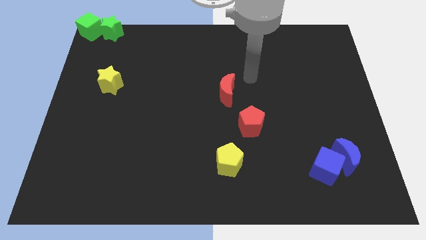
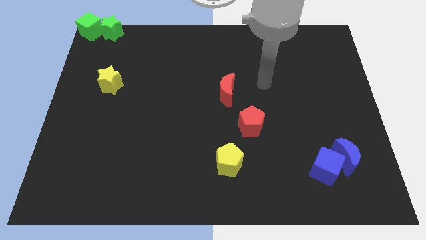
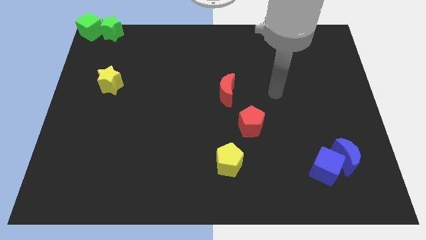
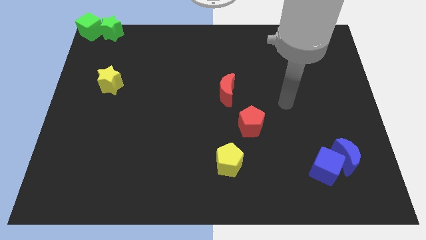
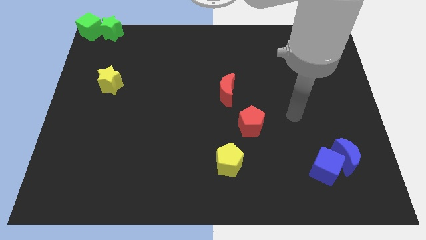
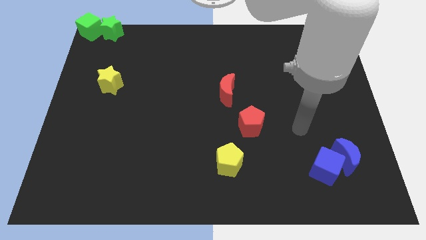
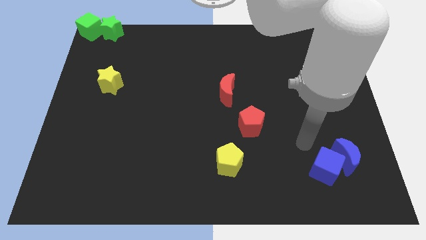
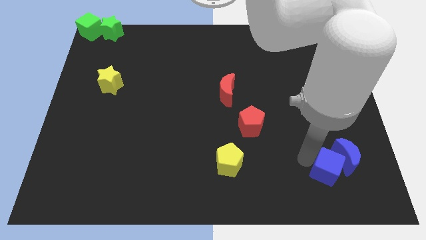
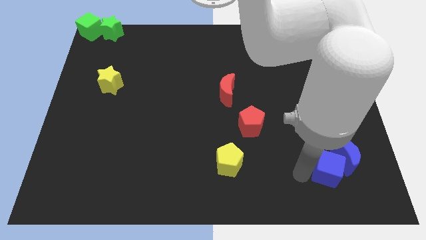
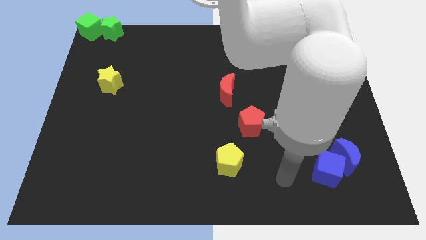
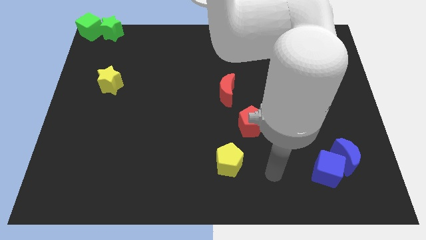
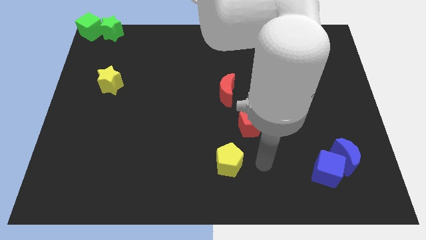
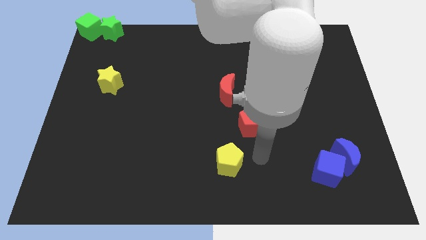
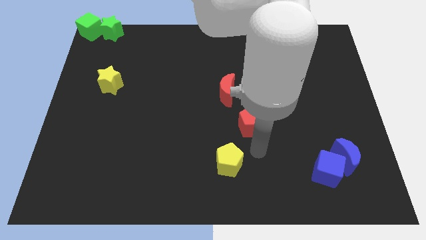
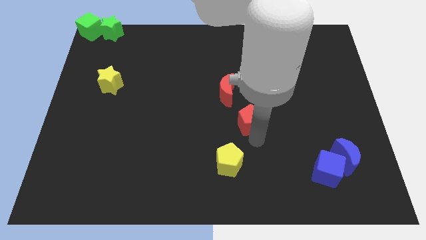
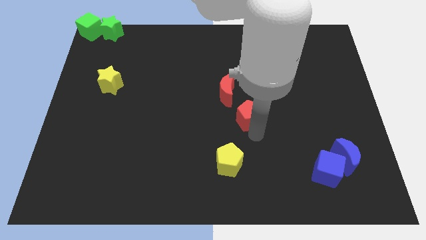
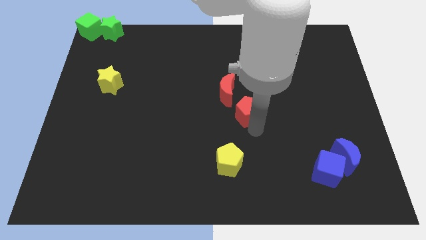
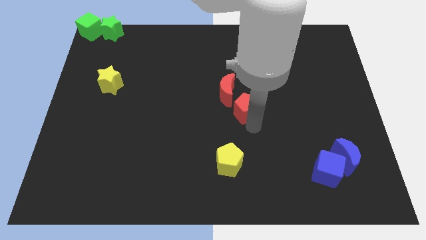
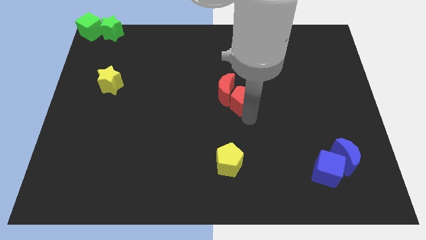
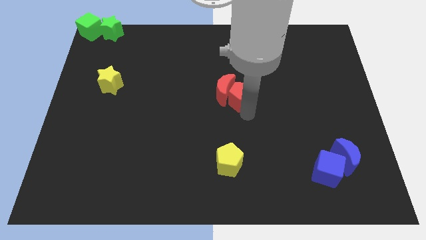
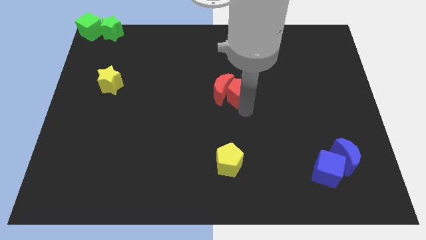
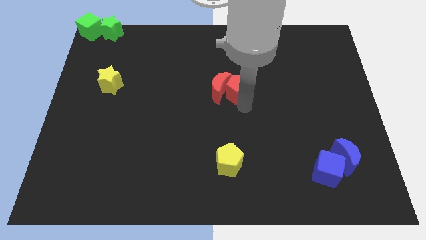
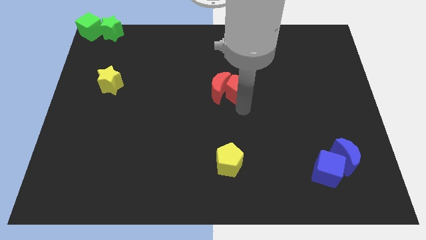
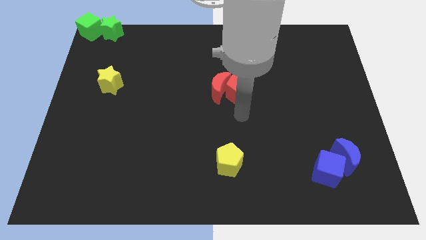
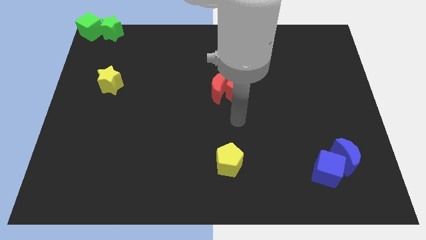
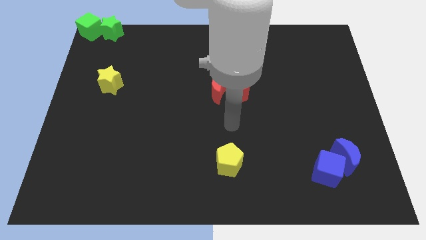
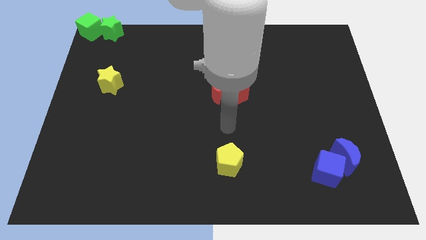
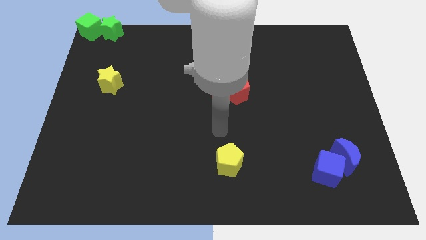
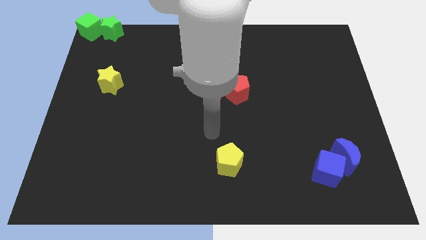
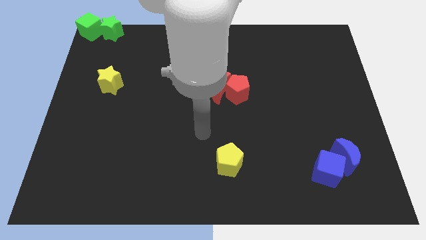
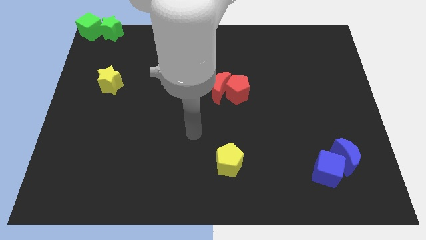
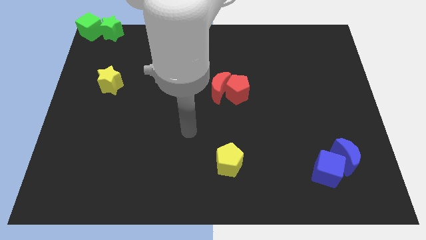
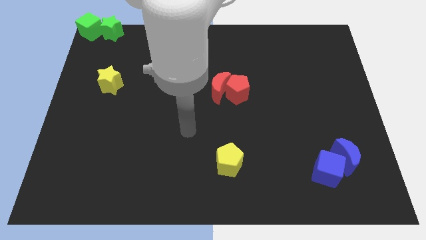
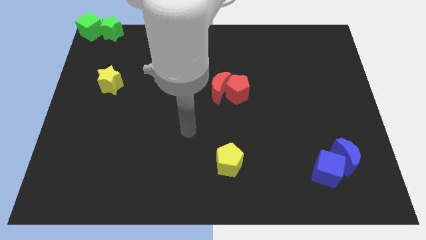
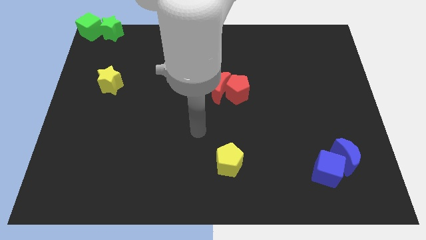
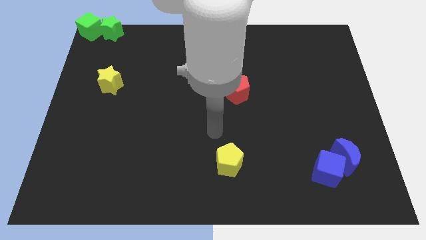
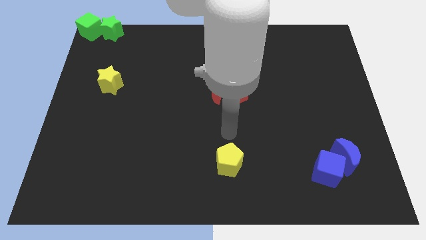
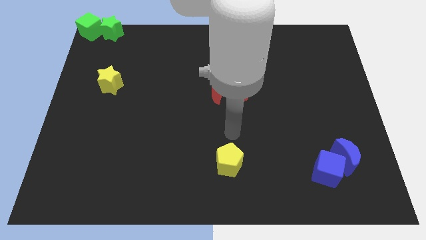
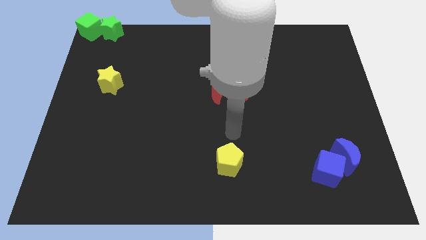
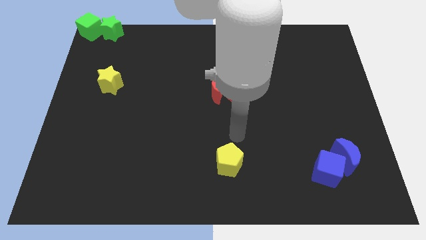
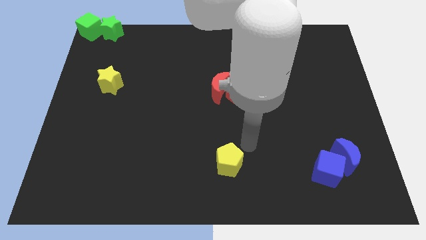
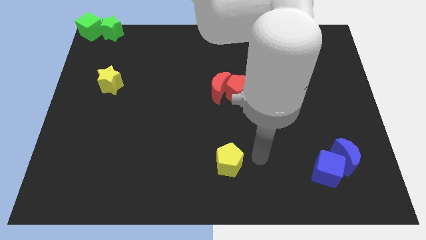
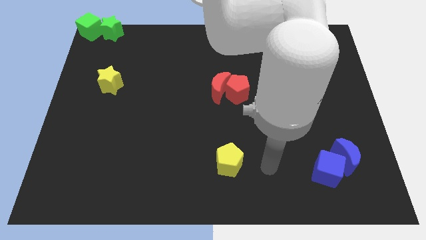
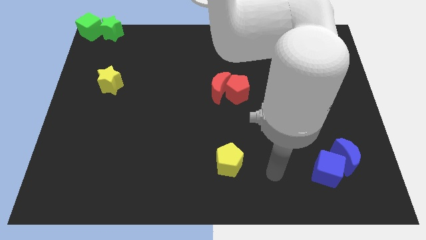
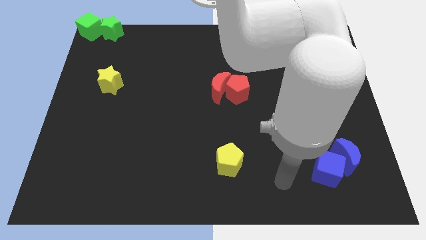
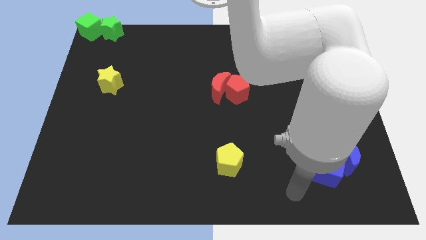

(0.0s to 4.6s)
move the red pentagon into the red crescent

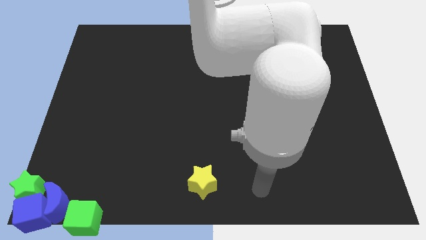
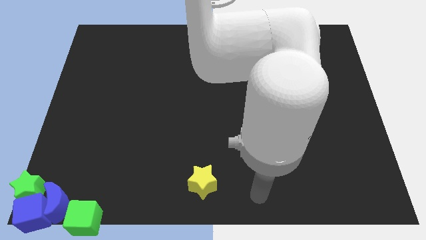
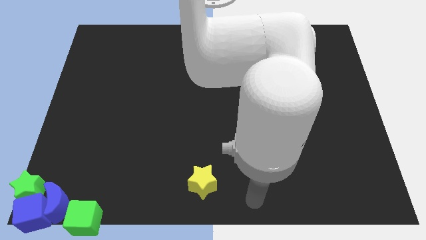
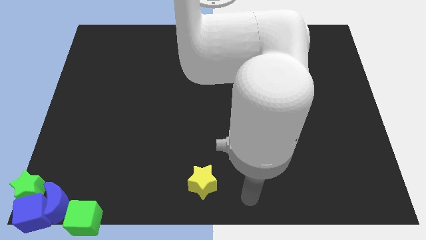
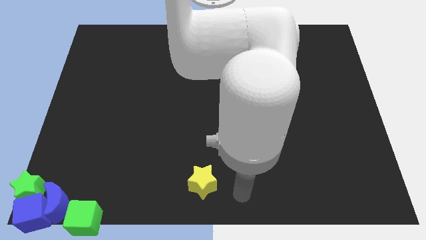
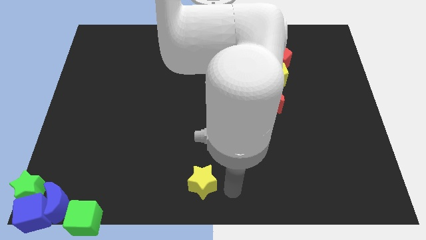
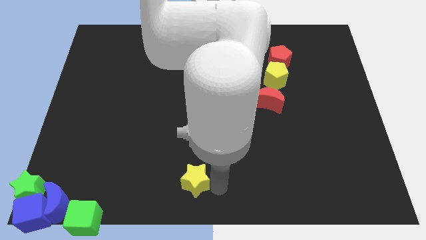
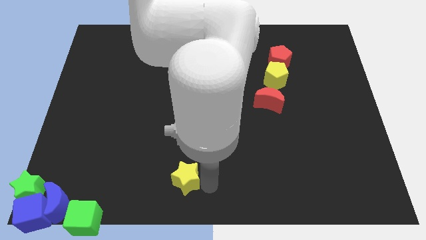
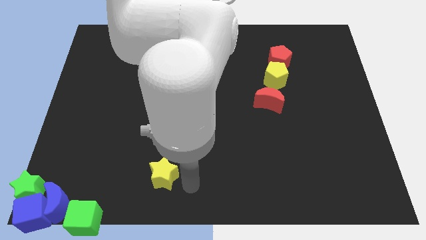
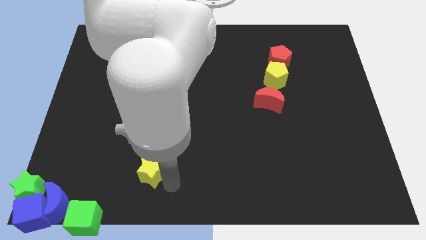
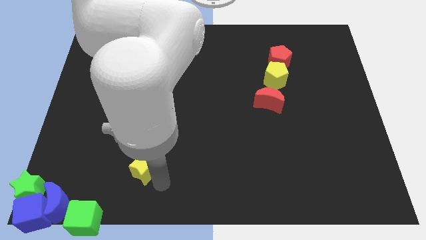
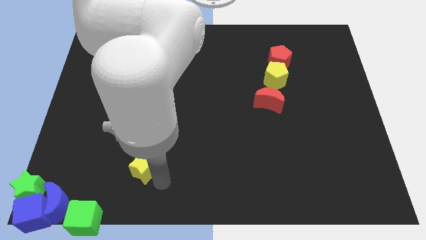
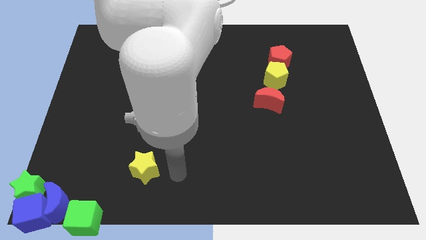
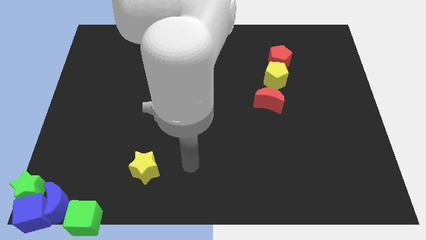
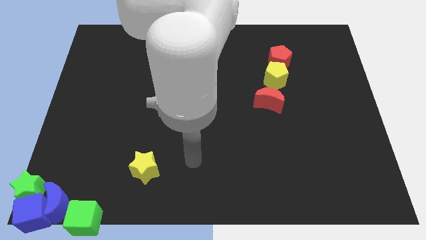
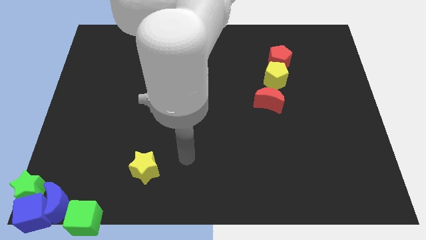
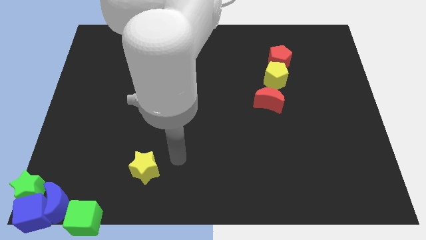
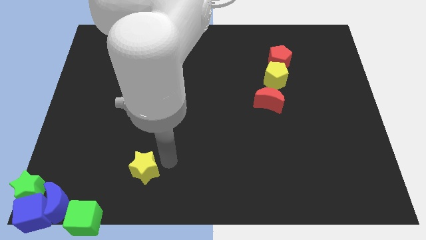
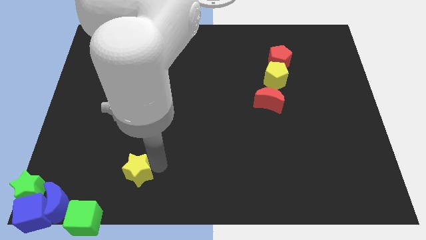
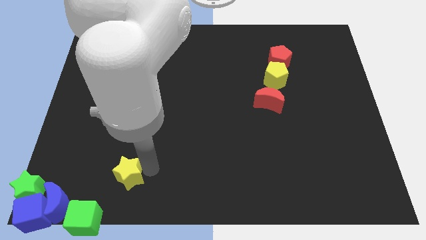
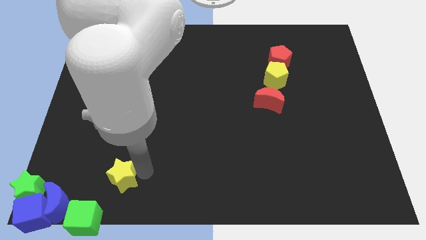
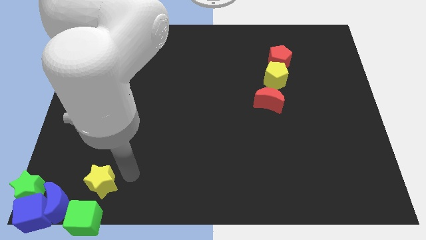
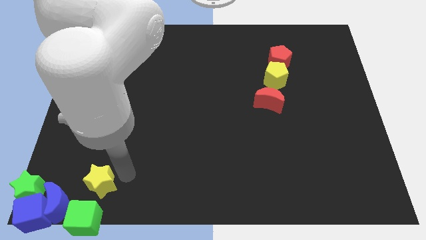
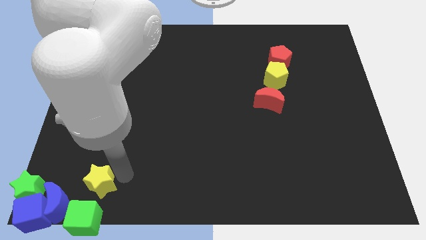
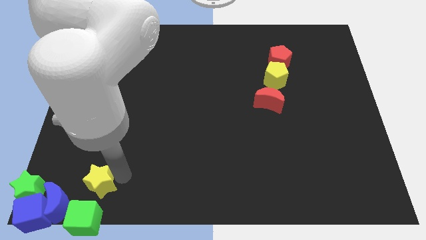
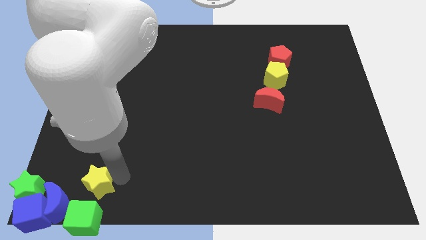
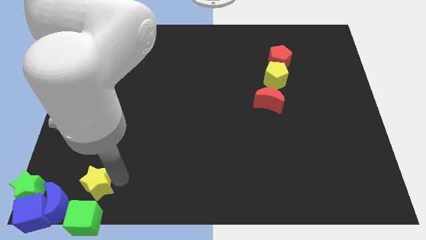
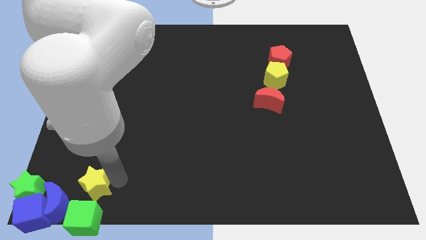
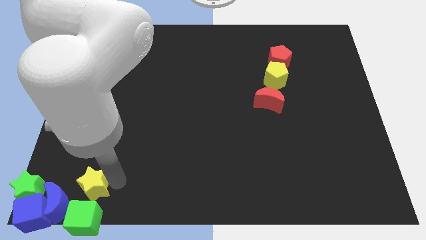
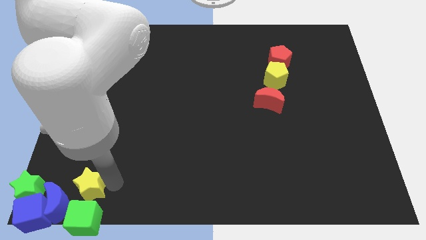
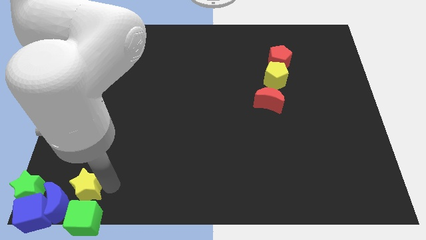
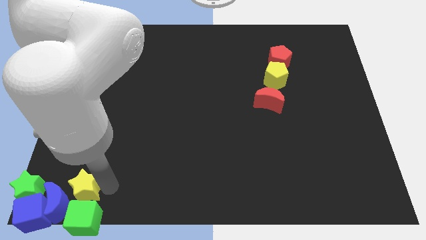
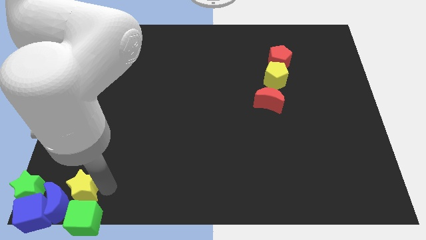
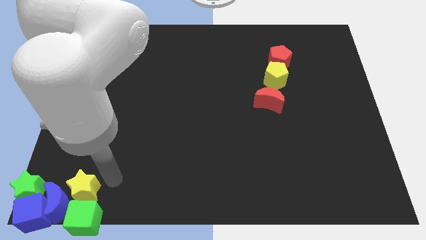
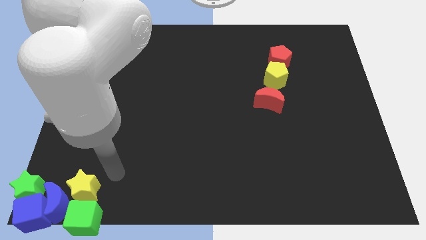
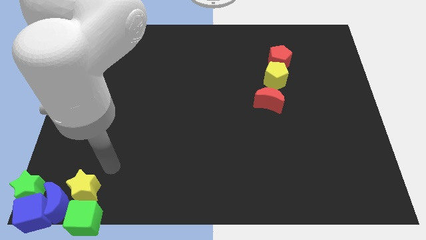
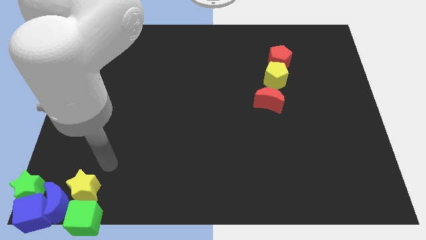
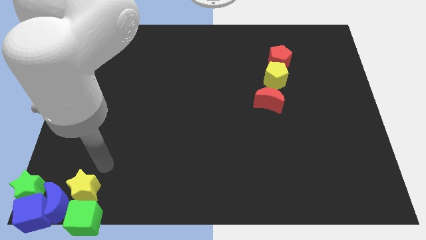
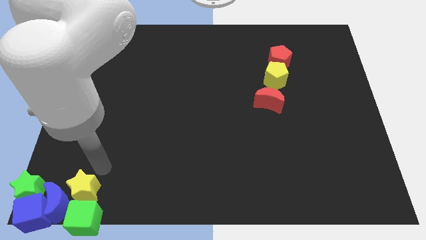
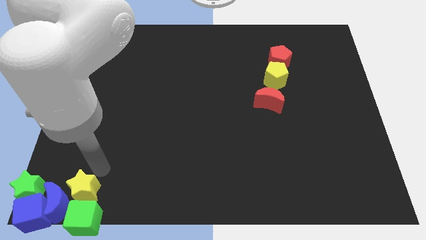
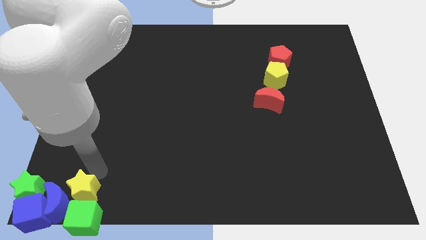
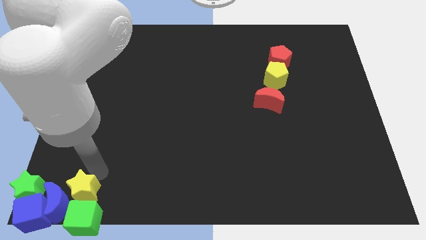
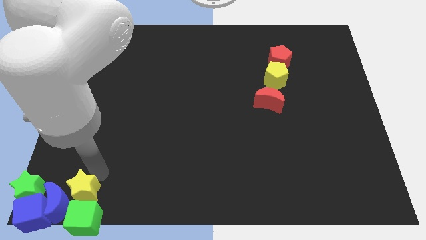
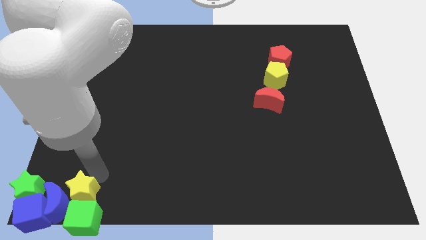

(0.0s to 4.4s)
move yellow star to the top of green cube
